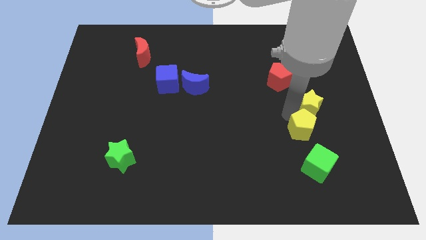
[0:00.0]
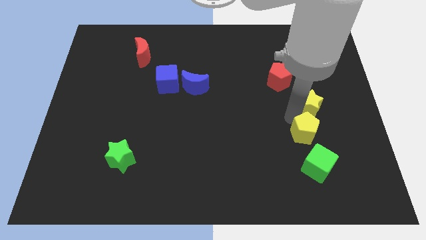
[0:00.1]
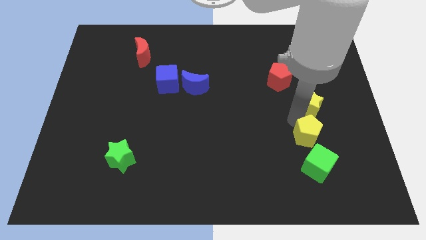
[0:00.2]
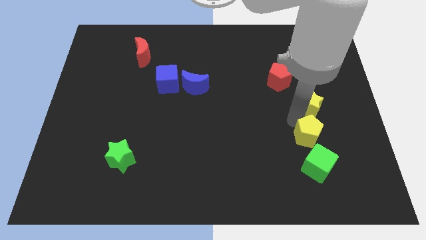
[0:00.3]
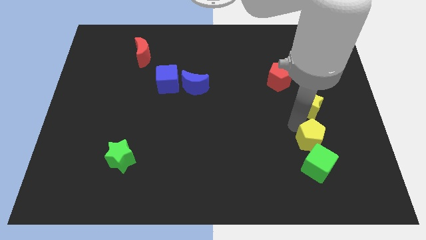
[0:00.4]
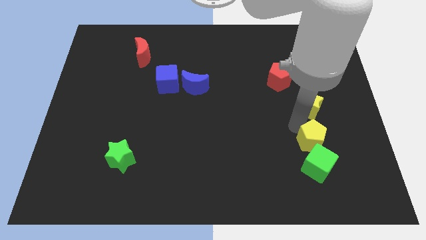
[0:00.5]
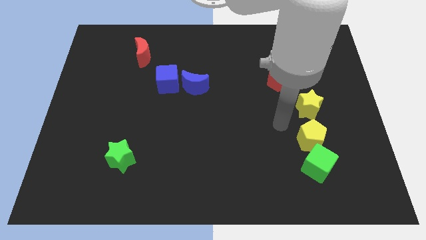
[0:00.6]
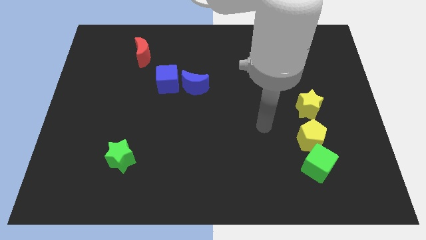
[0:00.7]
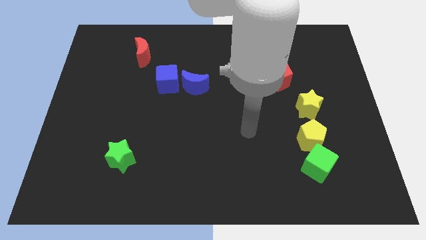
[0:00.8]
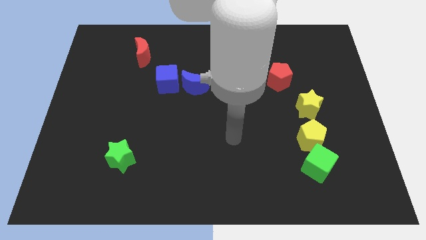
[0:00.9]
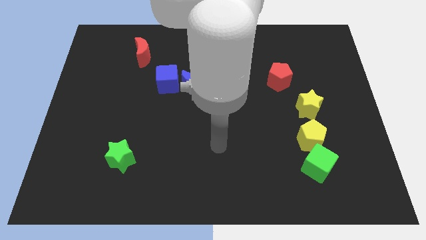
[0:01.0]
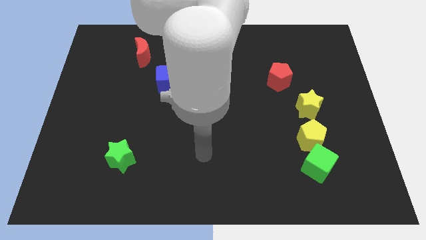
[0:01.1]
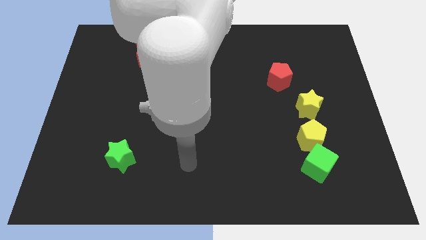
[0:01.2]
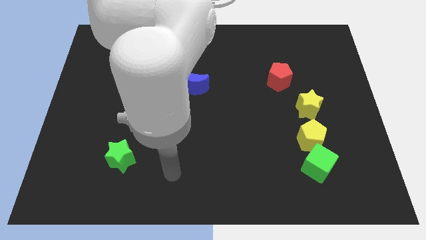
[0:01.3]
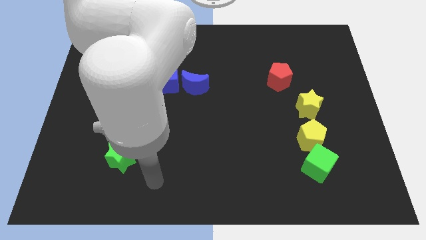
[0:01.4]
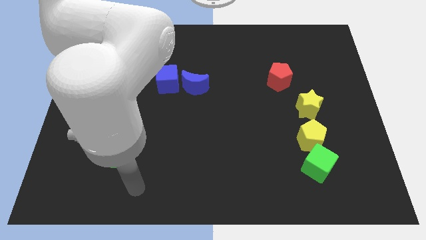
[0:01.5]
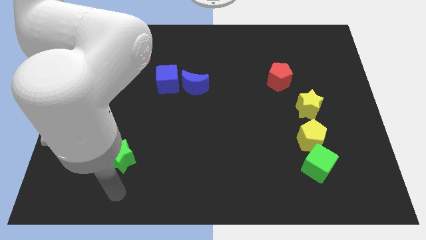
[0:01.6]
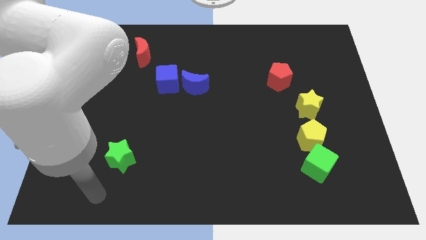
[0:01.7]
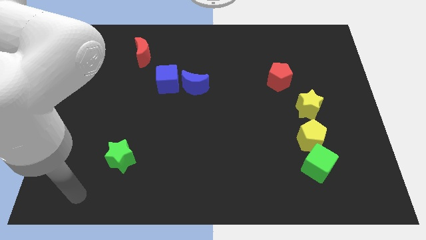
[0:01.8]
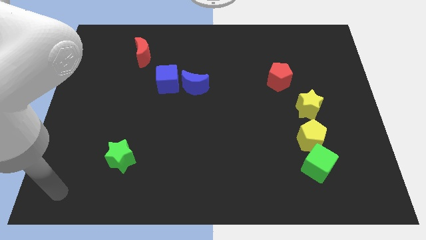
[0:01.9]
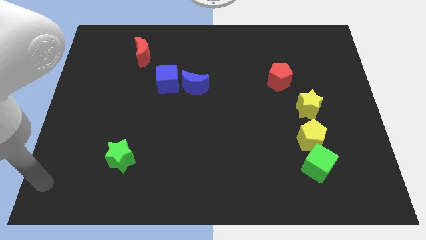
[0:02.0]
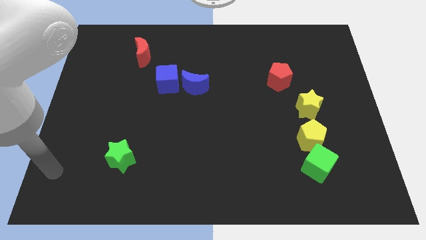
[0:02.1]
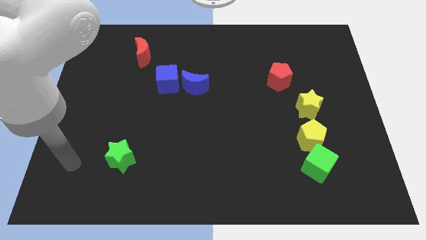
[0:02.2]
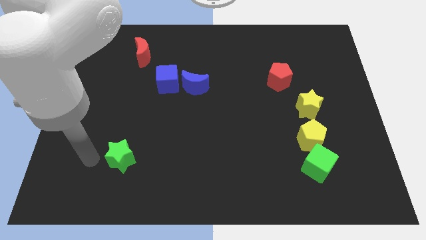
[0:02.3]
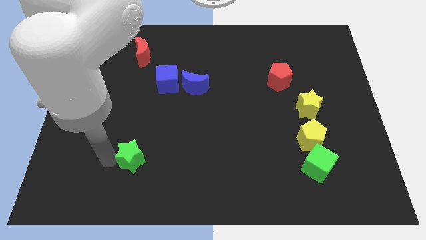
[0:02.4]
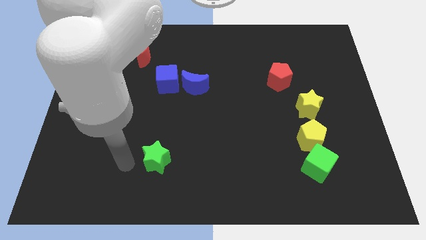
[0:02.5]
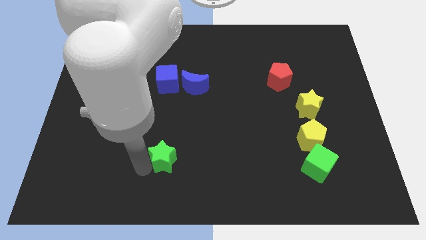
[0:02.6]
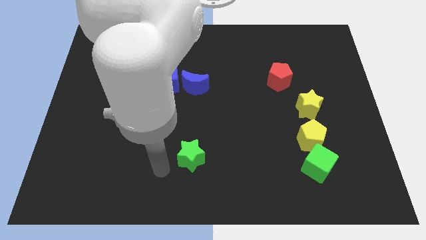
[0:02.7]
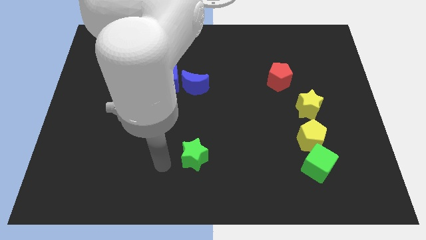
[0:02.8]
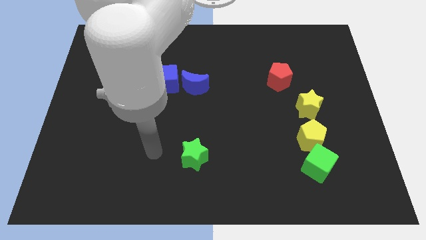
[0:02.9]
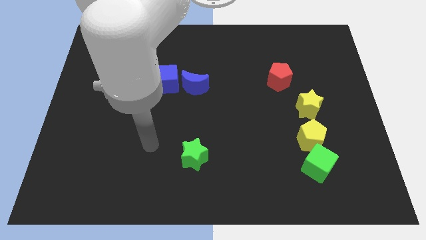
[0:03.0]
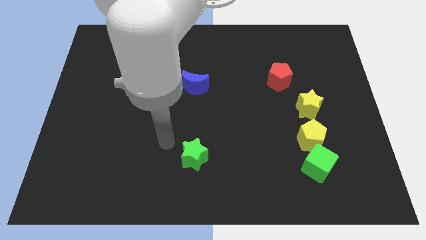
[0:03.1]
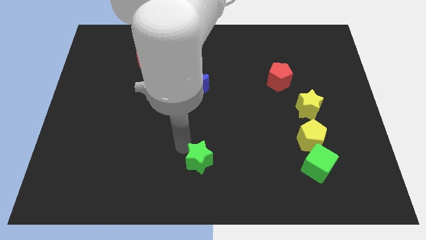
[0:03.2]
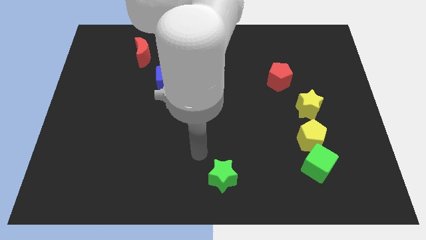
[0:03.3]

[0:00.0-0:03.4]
move the green star vertically at the bottom of the blue moon

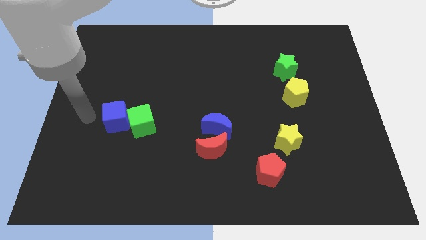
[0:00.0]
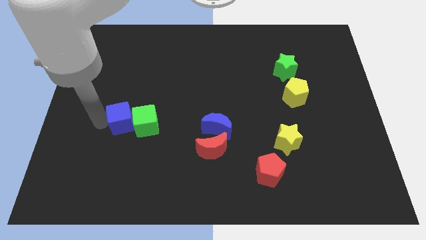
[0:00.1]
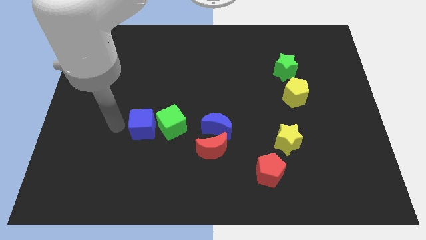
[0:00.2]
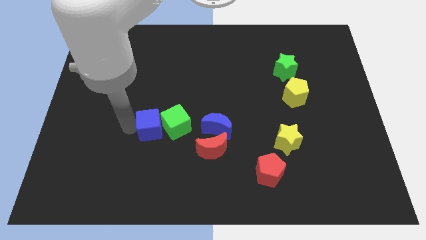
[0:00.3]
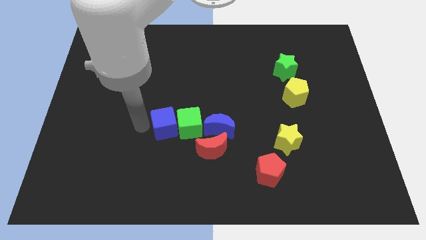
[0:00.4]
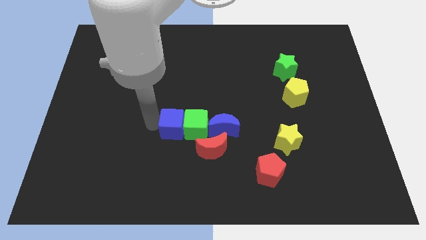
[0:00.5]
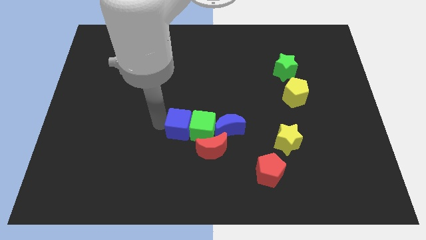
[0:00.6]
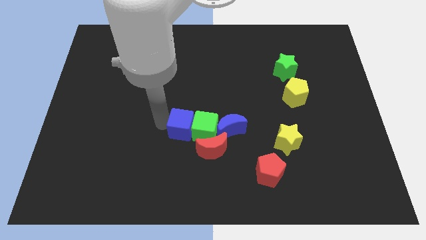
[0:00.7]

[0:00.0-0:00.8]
move cubes in to blue moon

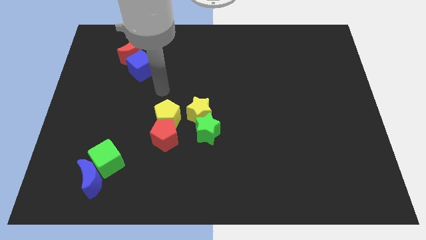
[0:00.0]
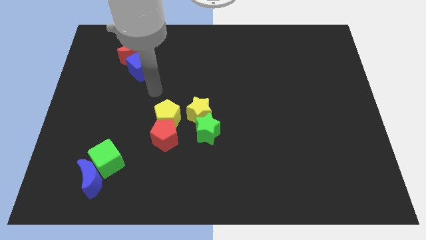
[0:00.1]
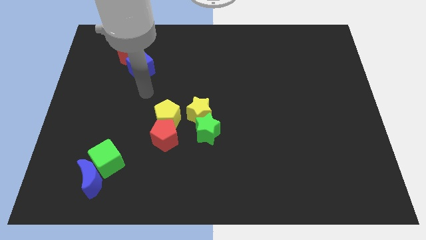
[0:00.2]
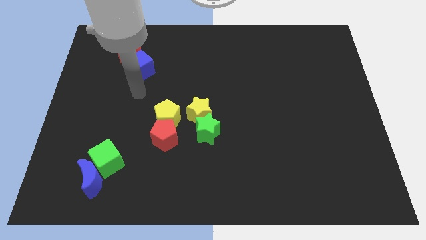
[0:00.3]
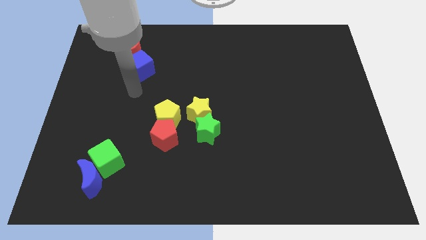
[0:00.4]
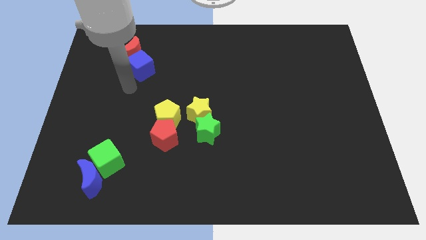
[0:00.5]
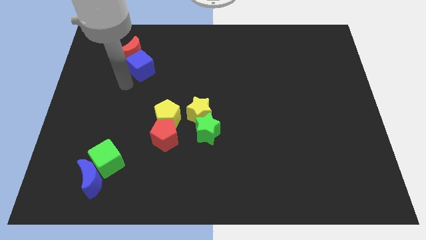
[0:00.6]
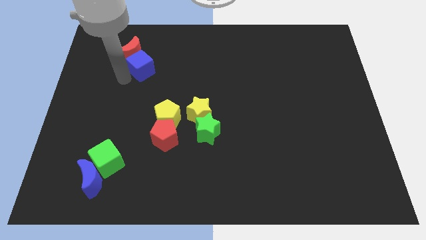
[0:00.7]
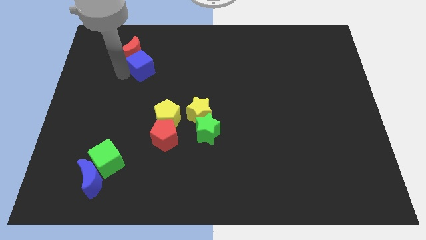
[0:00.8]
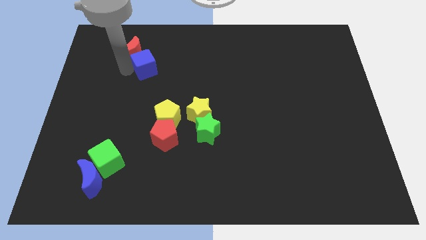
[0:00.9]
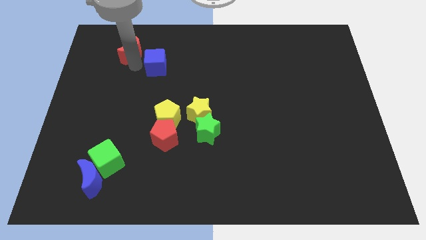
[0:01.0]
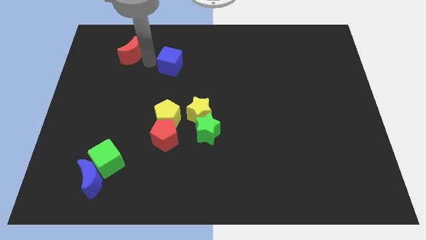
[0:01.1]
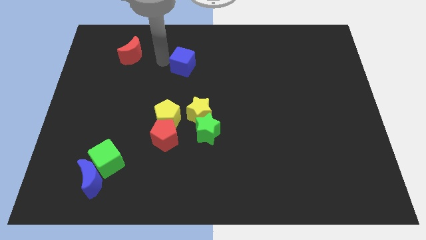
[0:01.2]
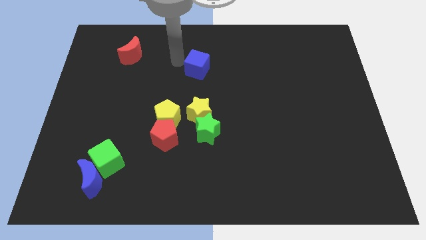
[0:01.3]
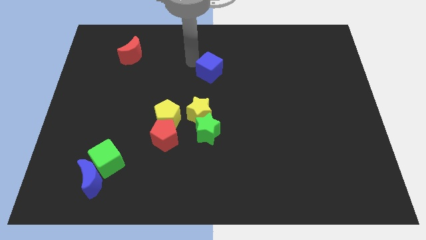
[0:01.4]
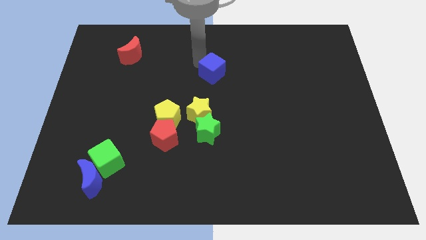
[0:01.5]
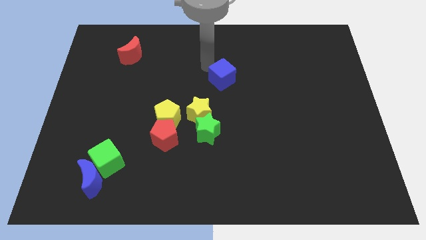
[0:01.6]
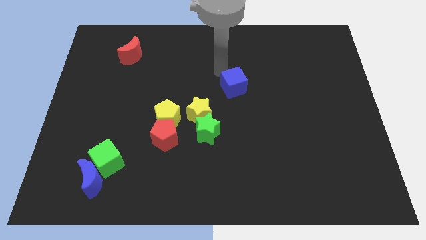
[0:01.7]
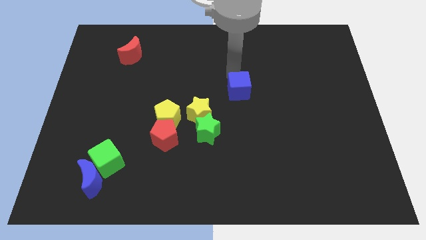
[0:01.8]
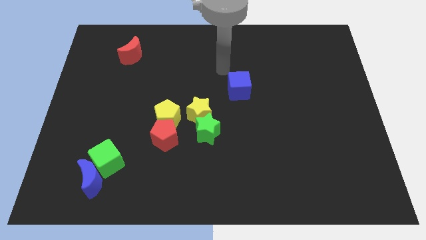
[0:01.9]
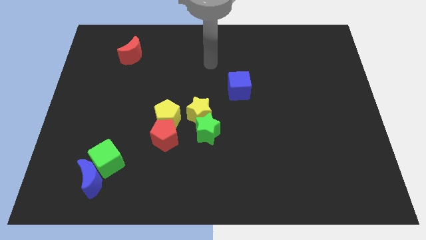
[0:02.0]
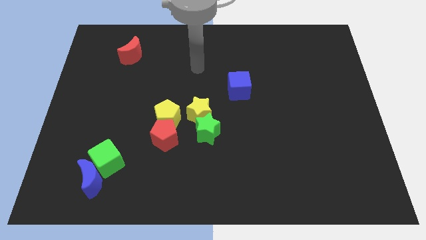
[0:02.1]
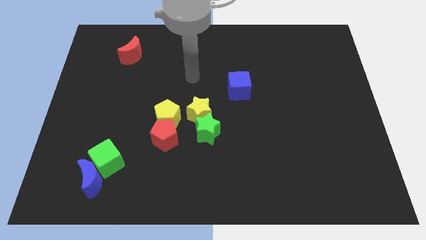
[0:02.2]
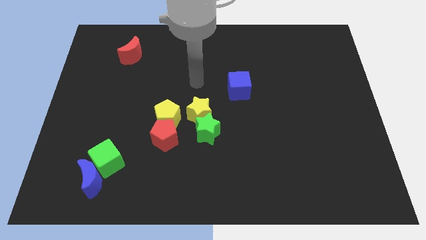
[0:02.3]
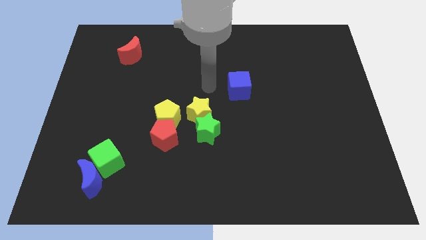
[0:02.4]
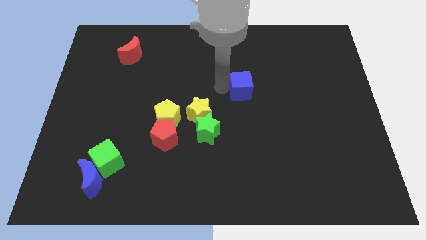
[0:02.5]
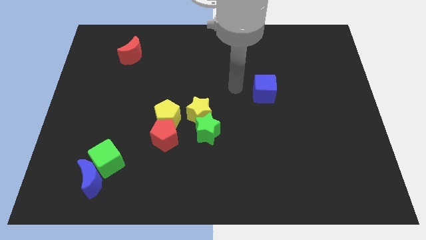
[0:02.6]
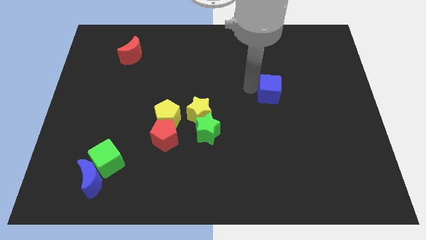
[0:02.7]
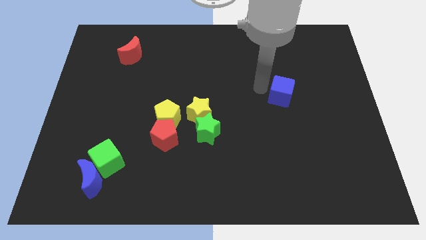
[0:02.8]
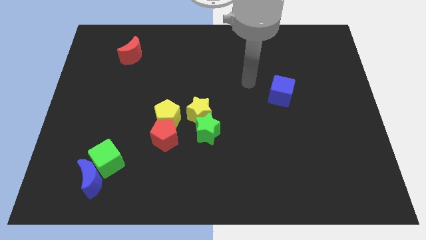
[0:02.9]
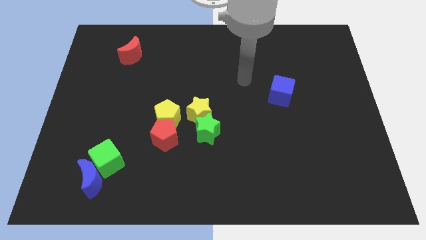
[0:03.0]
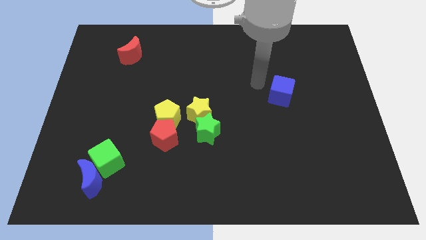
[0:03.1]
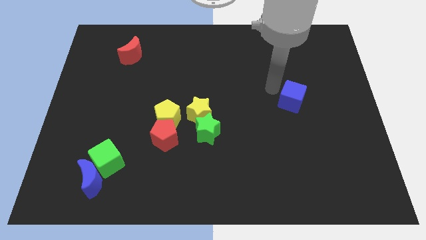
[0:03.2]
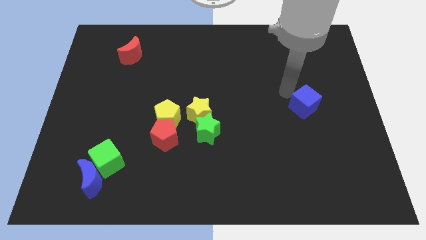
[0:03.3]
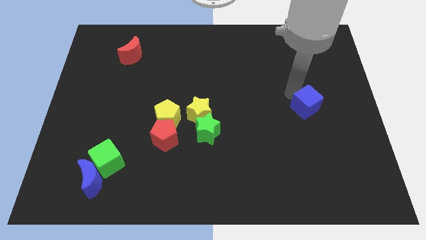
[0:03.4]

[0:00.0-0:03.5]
slide the blue cube to the right center of the board

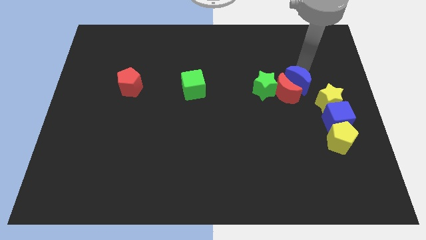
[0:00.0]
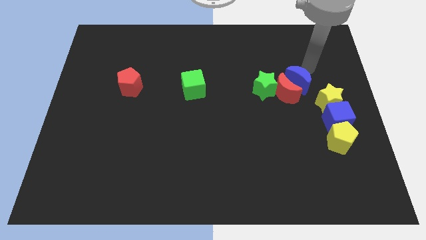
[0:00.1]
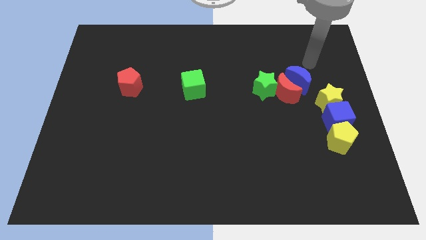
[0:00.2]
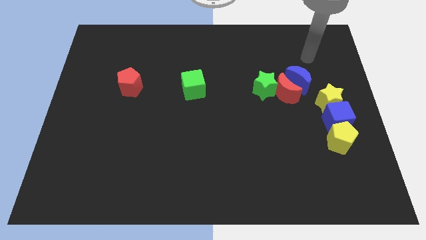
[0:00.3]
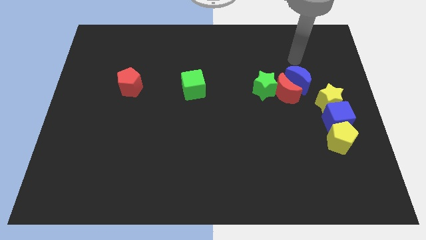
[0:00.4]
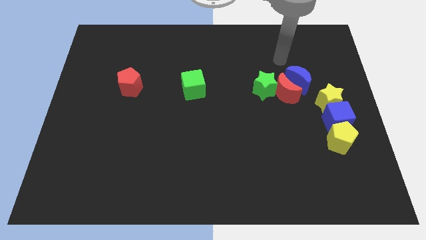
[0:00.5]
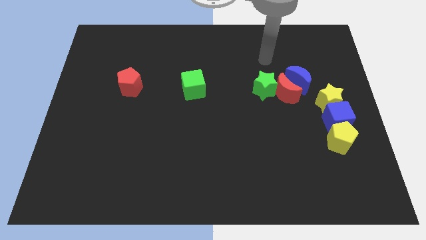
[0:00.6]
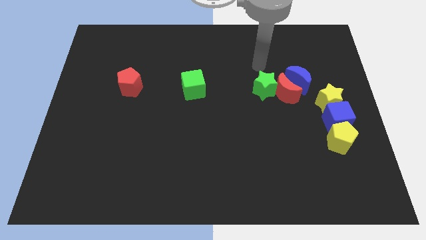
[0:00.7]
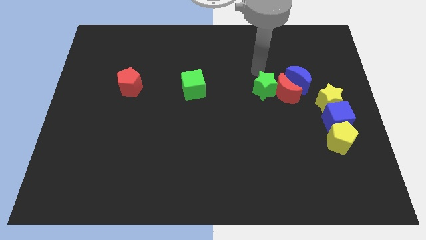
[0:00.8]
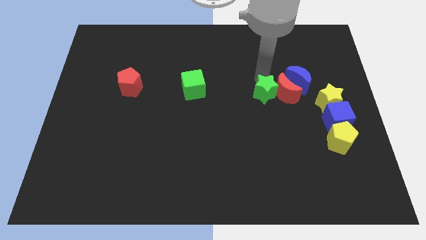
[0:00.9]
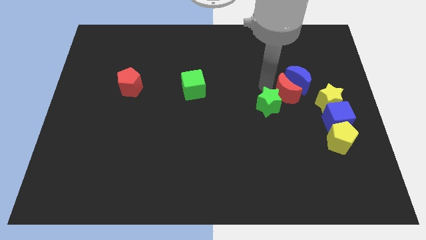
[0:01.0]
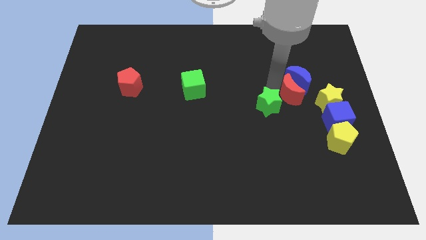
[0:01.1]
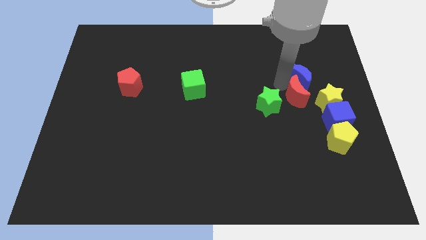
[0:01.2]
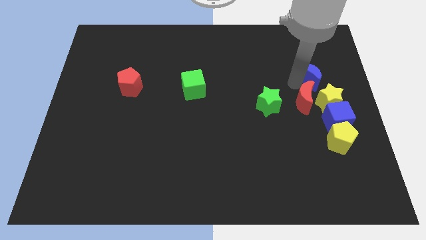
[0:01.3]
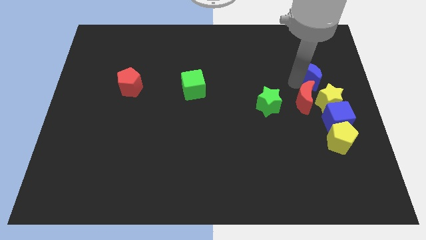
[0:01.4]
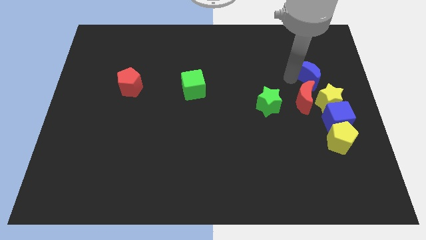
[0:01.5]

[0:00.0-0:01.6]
separate the green star and red moon
